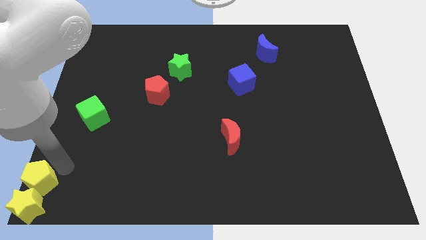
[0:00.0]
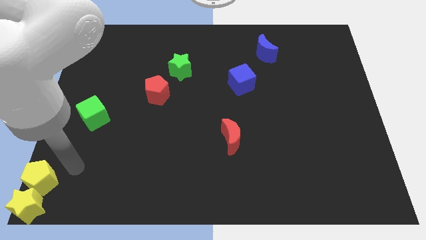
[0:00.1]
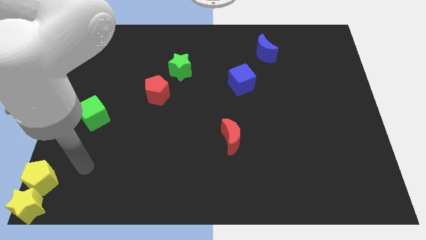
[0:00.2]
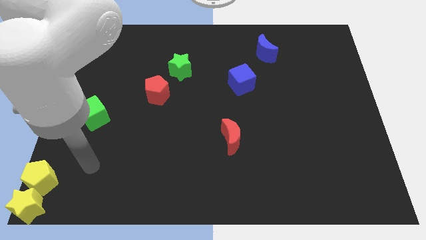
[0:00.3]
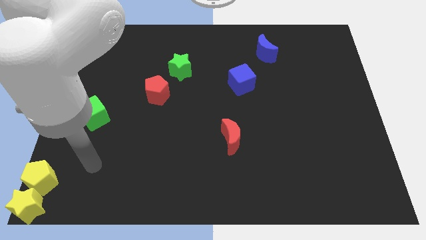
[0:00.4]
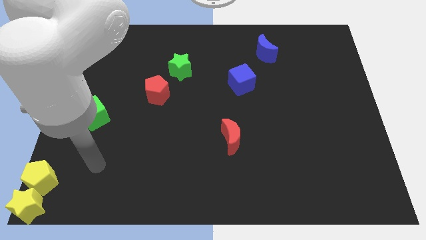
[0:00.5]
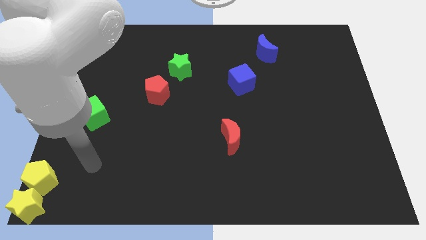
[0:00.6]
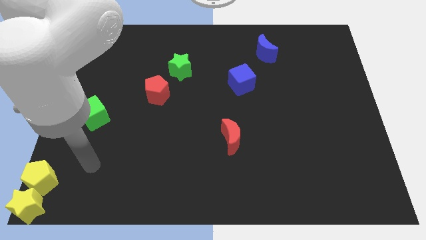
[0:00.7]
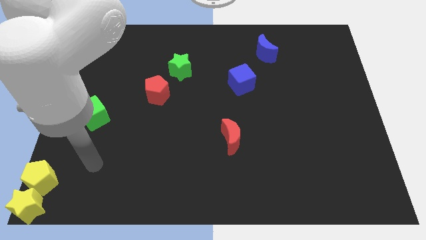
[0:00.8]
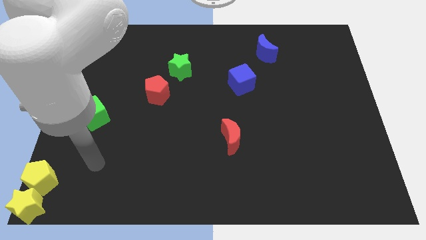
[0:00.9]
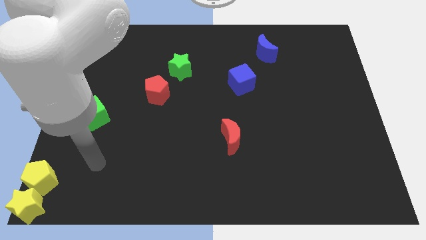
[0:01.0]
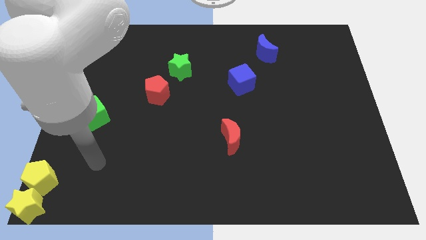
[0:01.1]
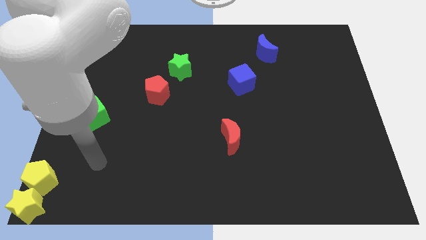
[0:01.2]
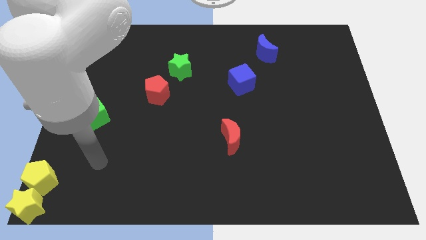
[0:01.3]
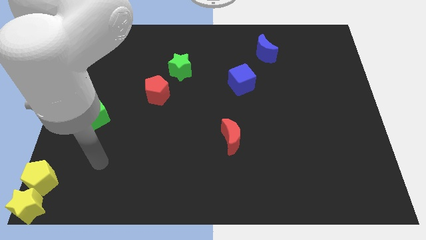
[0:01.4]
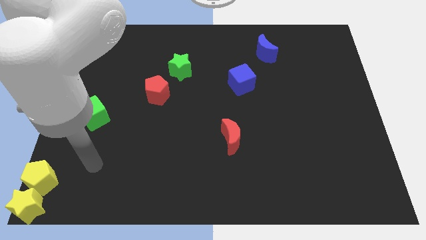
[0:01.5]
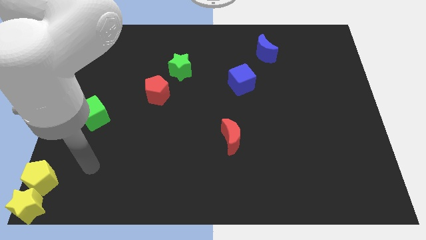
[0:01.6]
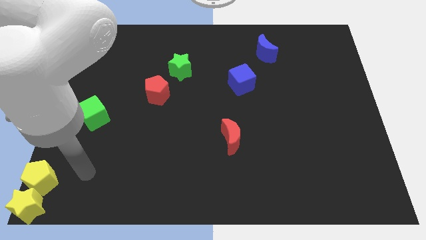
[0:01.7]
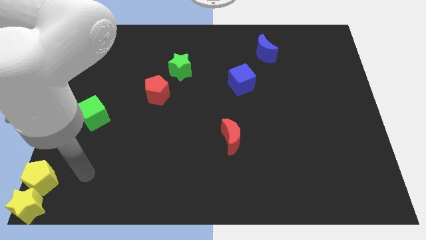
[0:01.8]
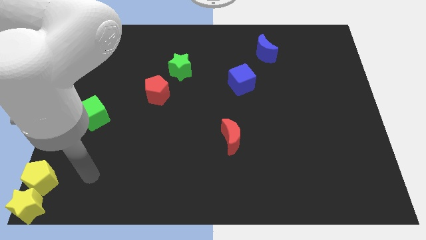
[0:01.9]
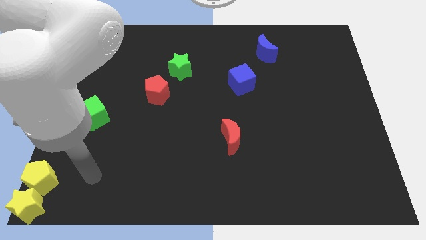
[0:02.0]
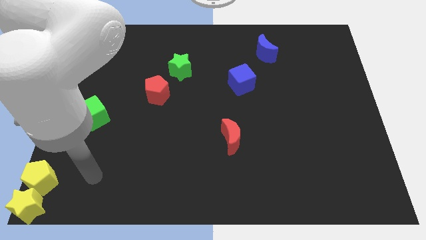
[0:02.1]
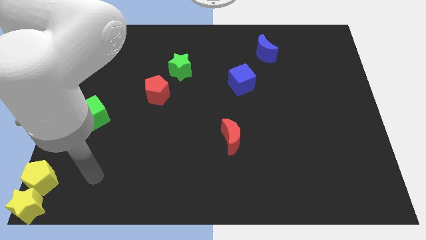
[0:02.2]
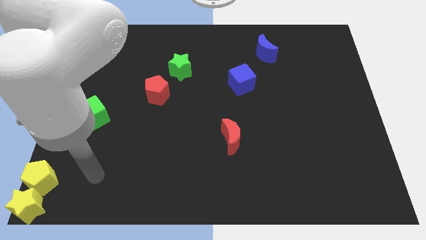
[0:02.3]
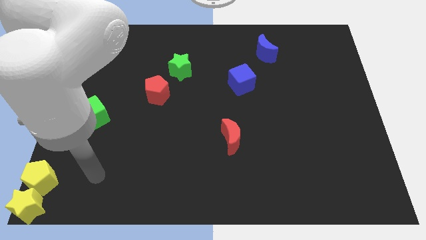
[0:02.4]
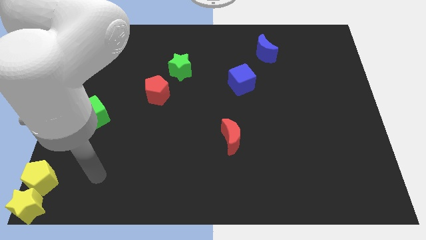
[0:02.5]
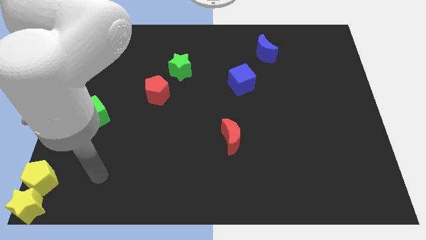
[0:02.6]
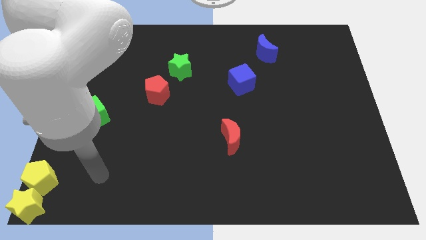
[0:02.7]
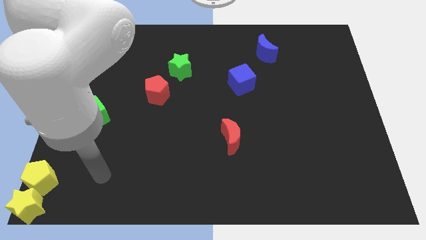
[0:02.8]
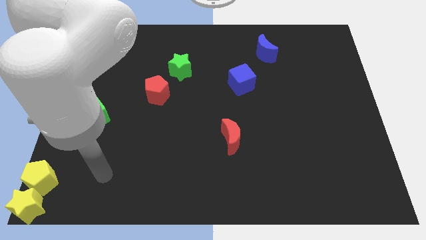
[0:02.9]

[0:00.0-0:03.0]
move away from the top side of the yellow pentagon

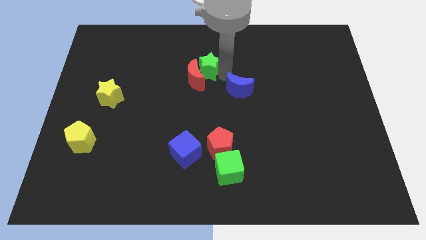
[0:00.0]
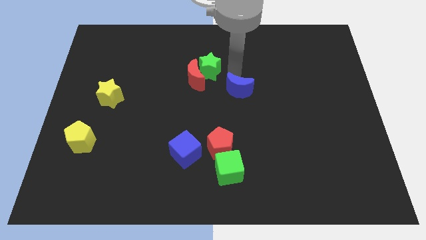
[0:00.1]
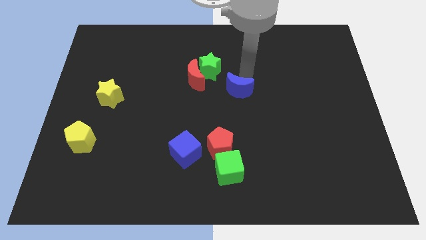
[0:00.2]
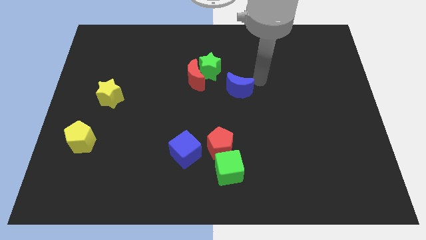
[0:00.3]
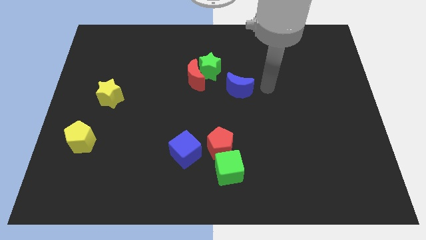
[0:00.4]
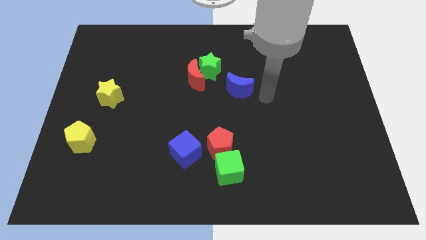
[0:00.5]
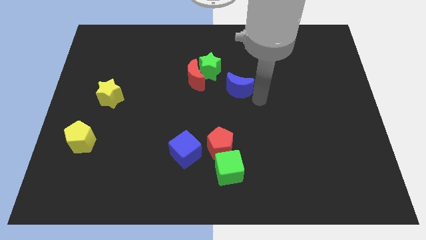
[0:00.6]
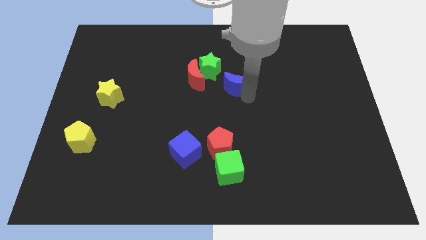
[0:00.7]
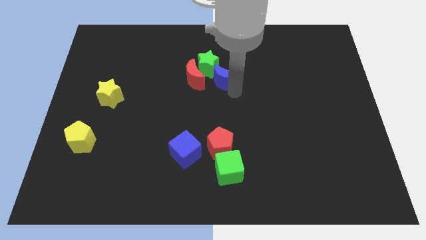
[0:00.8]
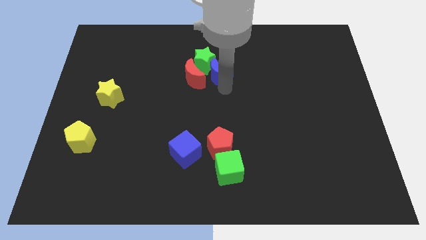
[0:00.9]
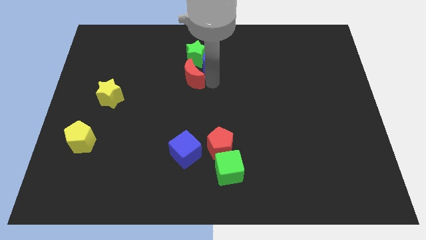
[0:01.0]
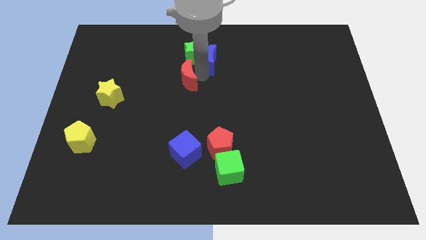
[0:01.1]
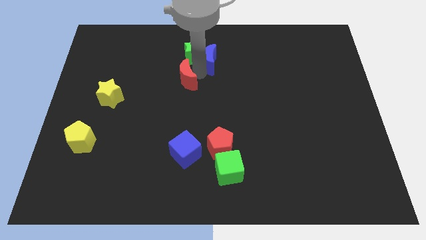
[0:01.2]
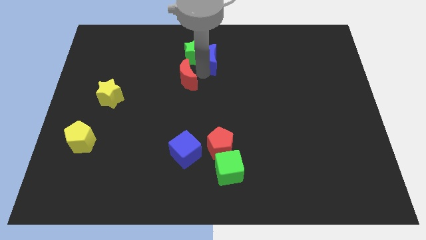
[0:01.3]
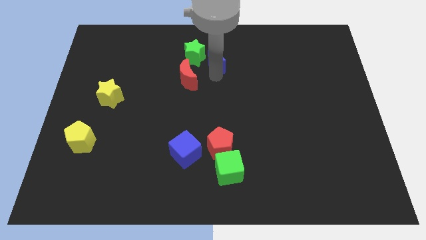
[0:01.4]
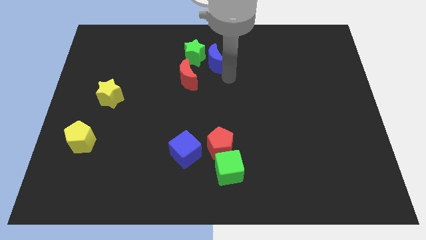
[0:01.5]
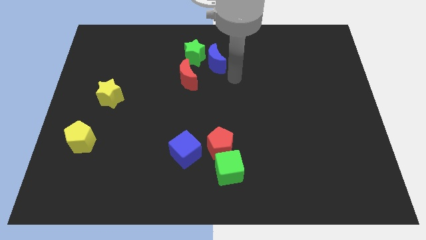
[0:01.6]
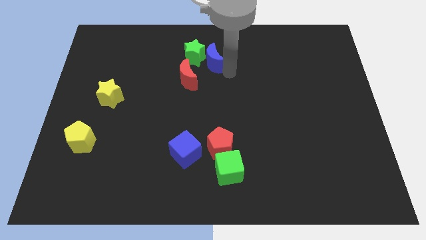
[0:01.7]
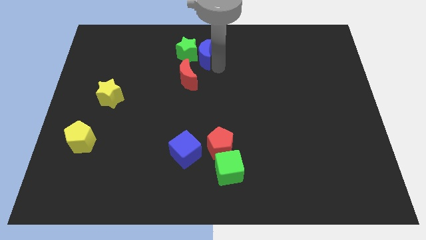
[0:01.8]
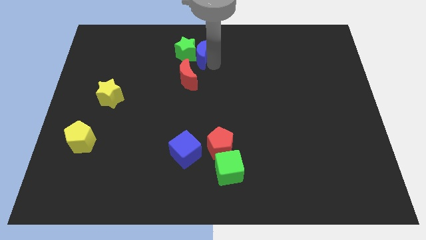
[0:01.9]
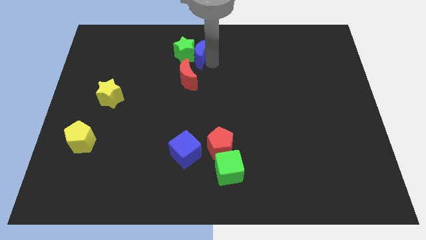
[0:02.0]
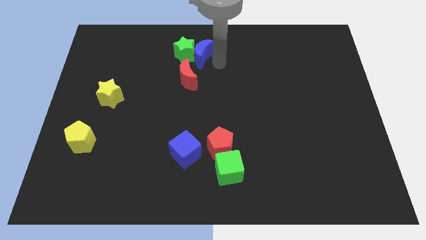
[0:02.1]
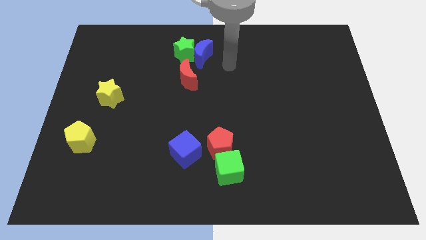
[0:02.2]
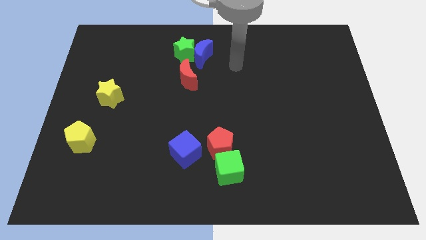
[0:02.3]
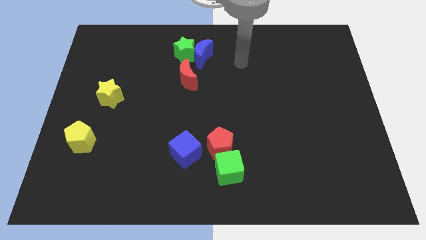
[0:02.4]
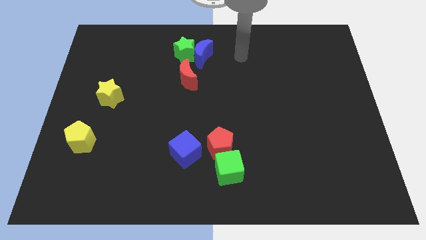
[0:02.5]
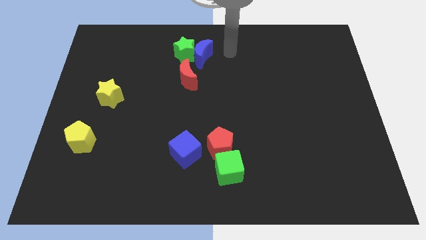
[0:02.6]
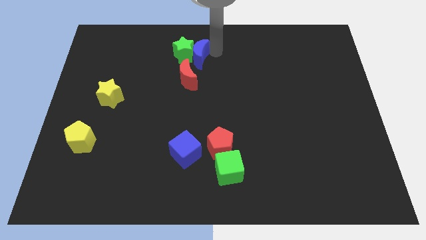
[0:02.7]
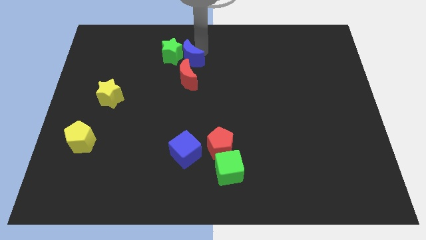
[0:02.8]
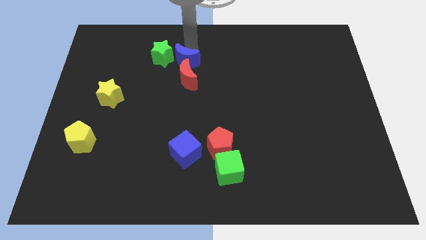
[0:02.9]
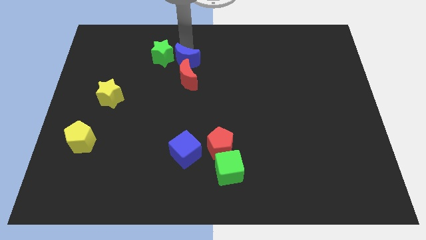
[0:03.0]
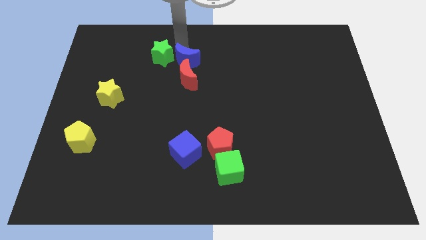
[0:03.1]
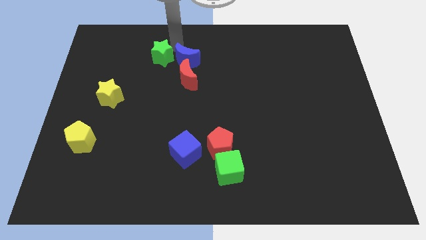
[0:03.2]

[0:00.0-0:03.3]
slide the blue crescent and the green star to the left

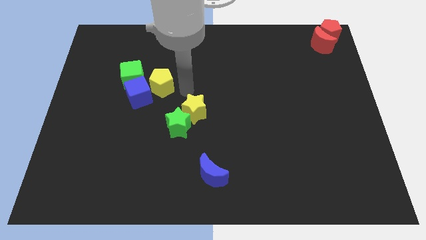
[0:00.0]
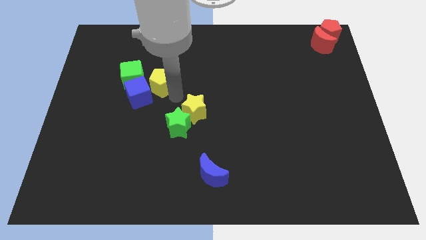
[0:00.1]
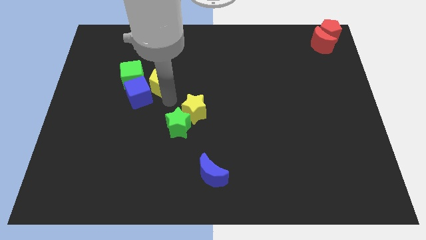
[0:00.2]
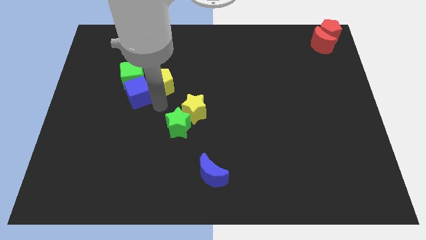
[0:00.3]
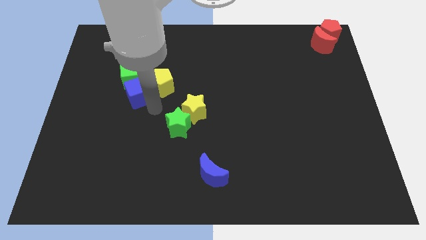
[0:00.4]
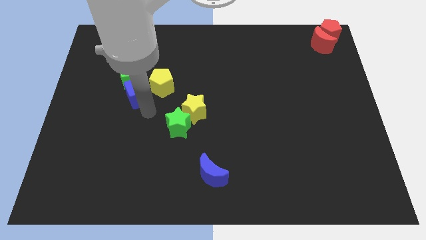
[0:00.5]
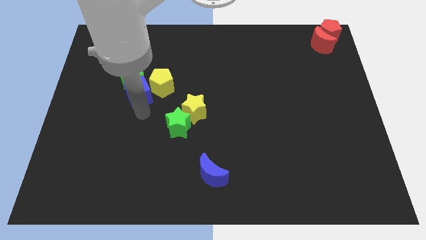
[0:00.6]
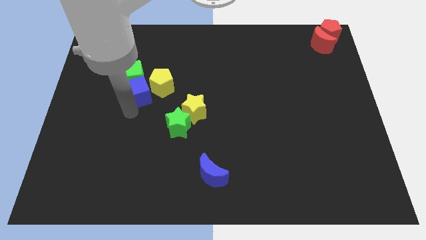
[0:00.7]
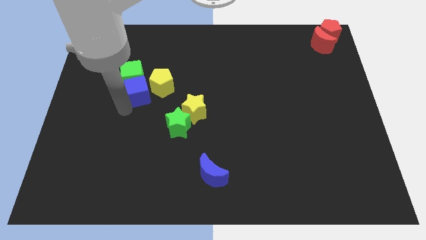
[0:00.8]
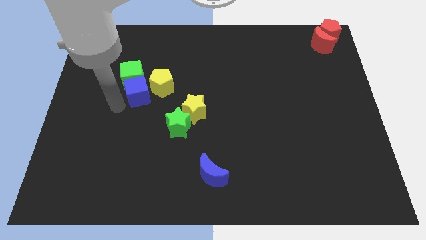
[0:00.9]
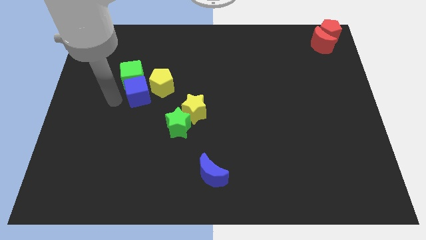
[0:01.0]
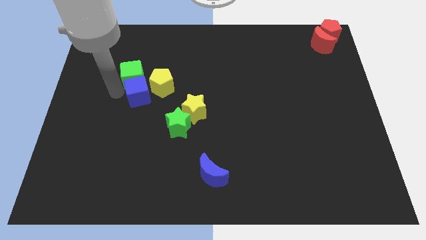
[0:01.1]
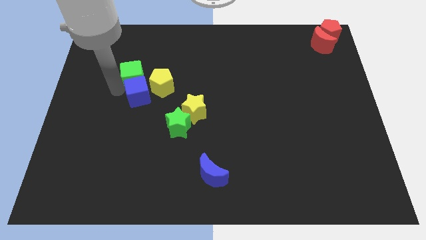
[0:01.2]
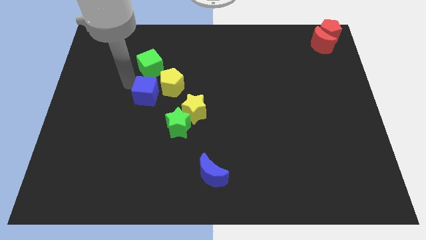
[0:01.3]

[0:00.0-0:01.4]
place the hand at the left side of the cubes

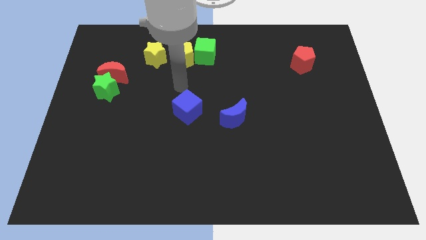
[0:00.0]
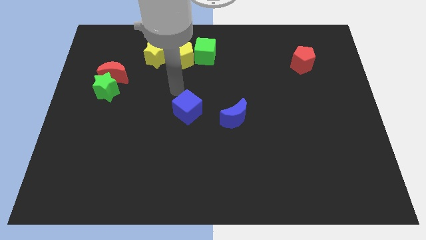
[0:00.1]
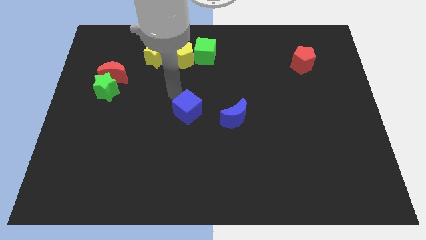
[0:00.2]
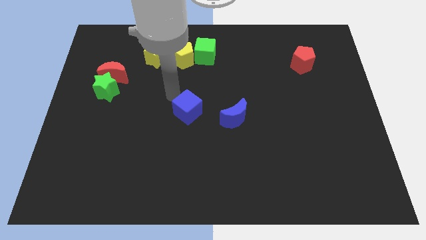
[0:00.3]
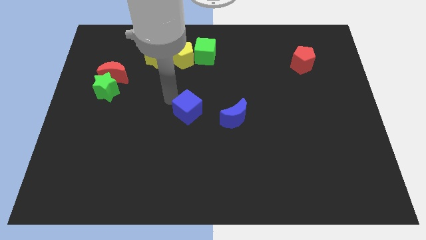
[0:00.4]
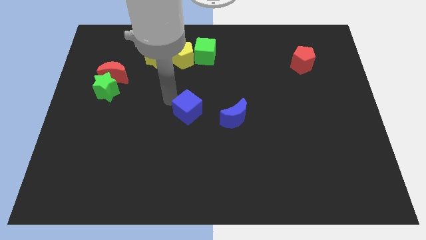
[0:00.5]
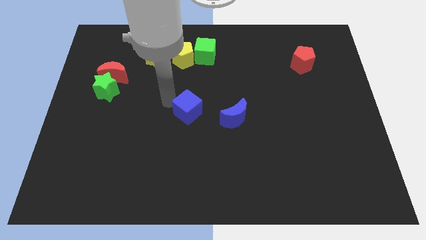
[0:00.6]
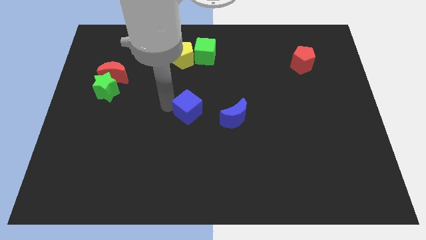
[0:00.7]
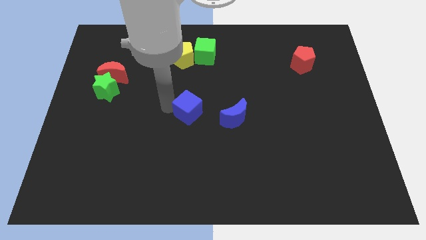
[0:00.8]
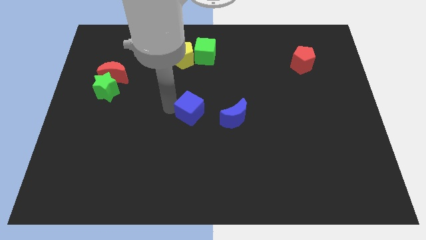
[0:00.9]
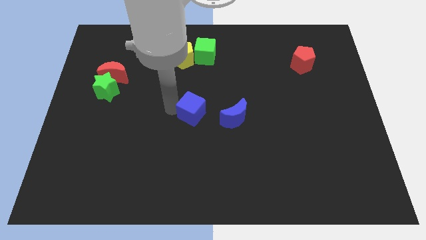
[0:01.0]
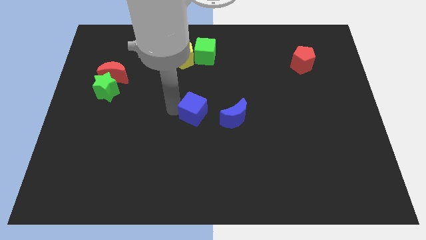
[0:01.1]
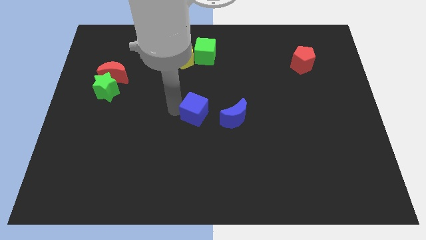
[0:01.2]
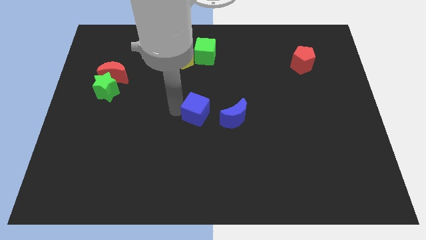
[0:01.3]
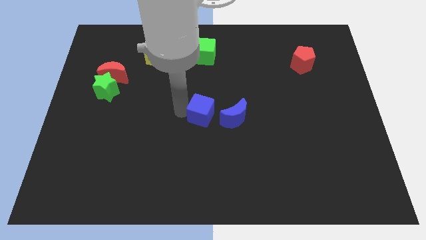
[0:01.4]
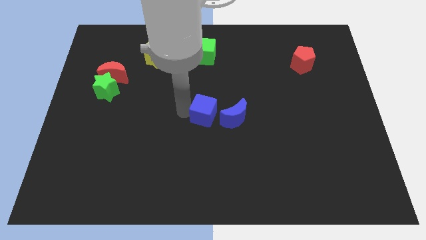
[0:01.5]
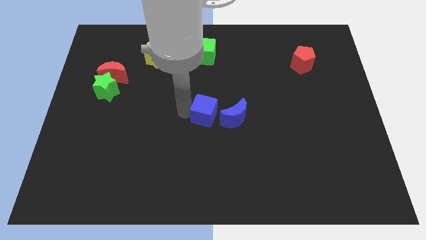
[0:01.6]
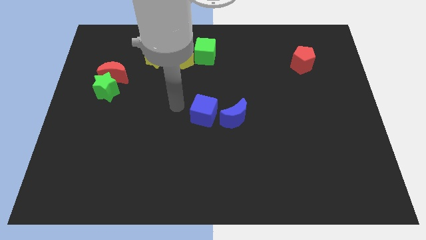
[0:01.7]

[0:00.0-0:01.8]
place the blue cube into the blue moon
